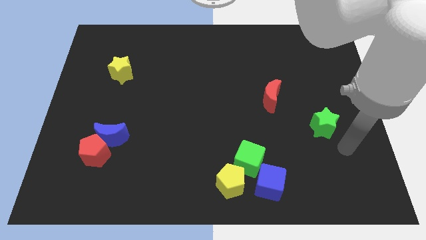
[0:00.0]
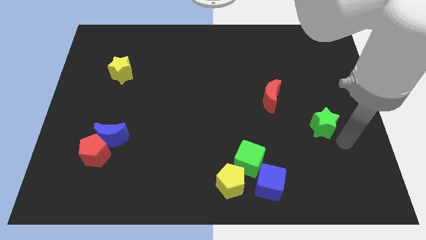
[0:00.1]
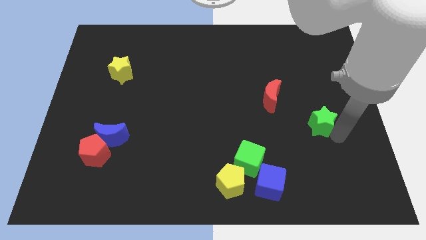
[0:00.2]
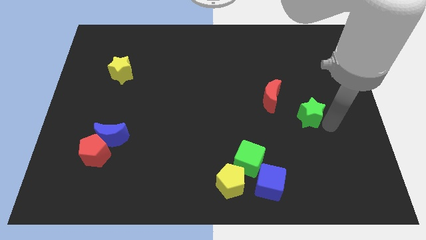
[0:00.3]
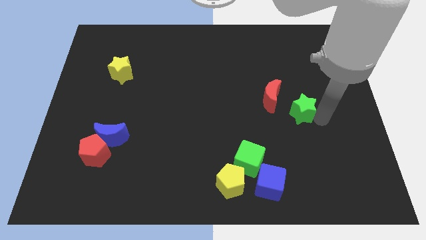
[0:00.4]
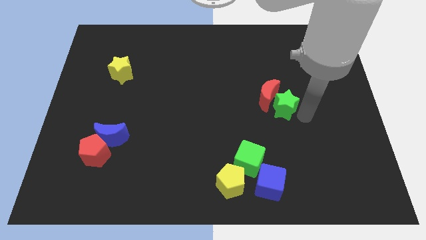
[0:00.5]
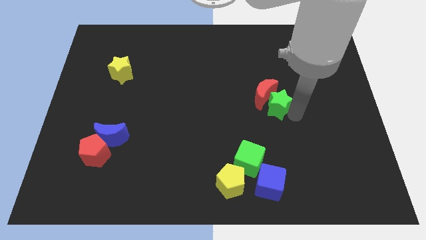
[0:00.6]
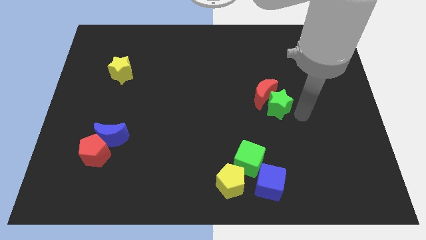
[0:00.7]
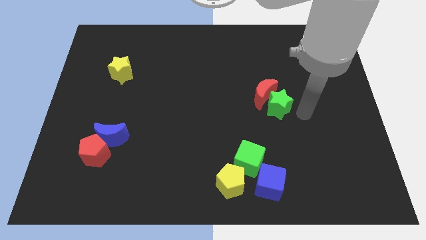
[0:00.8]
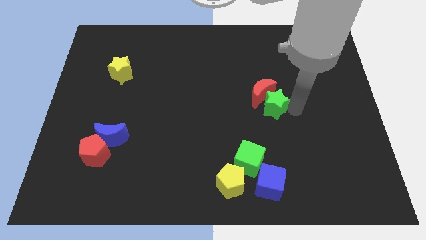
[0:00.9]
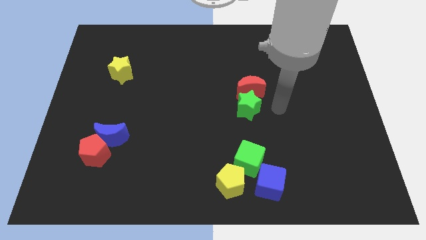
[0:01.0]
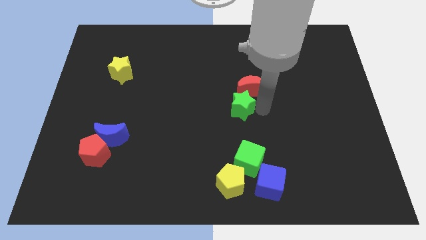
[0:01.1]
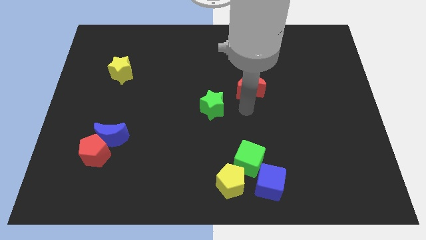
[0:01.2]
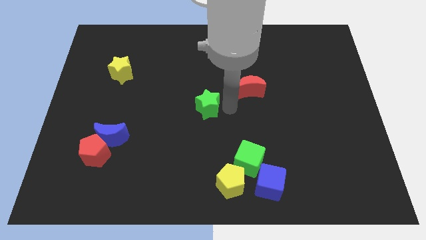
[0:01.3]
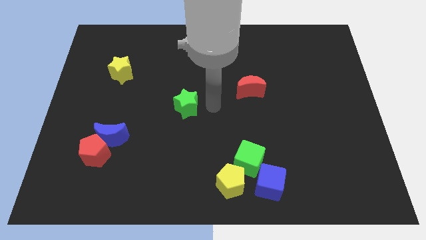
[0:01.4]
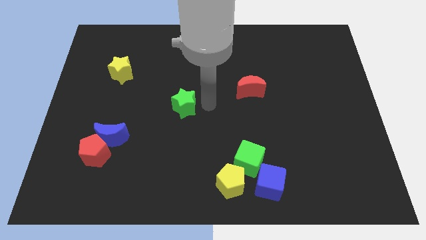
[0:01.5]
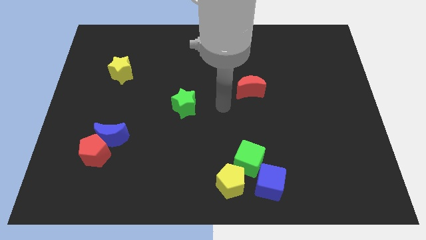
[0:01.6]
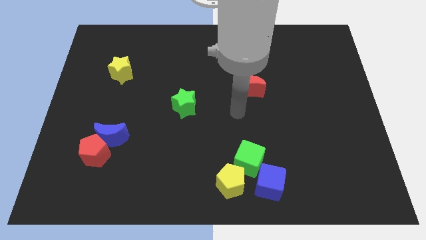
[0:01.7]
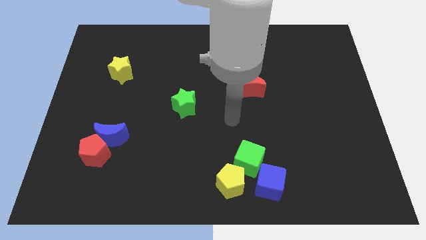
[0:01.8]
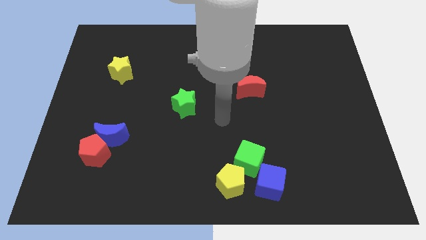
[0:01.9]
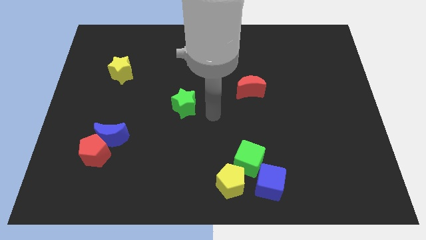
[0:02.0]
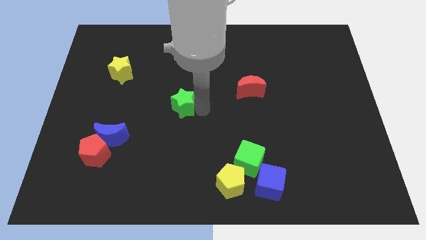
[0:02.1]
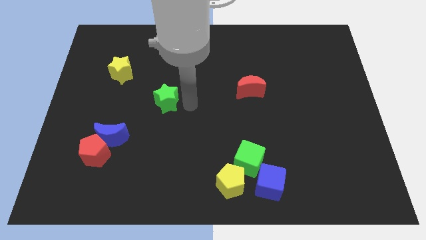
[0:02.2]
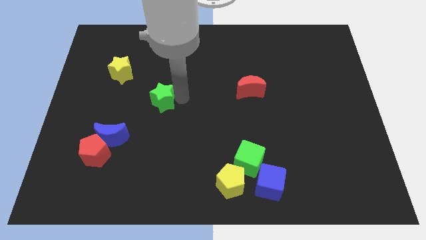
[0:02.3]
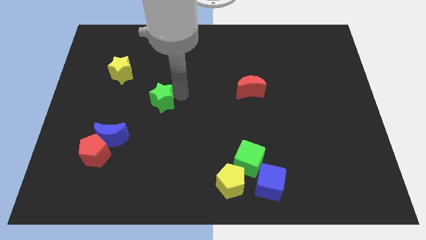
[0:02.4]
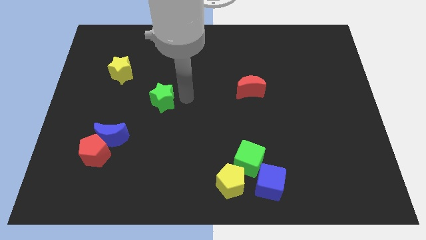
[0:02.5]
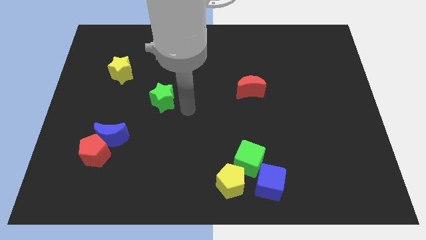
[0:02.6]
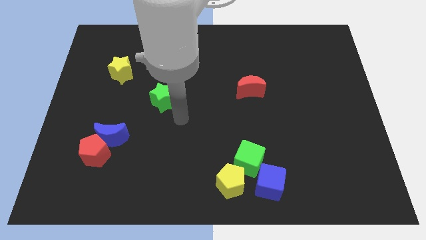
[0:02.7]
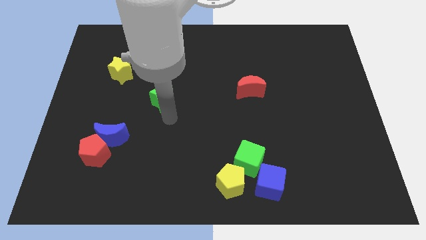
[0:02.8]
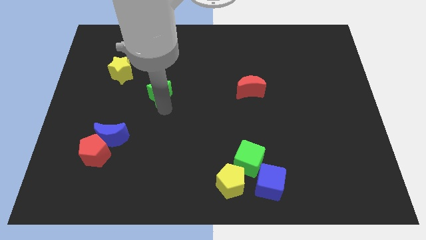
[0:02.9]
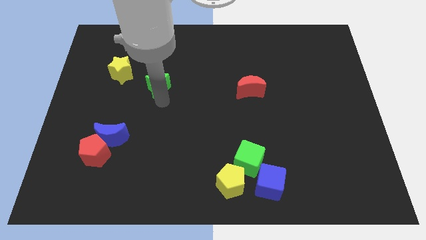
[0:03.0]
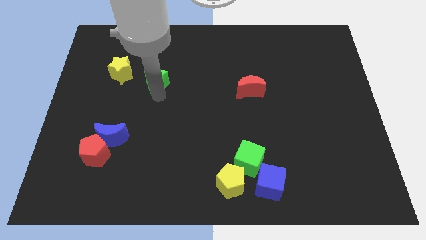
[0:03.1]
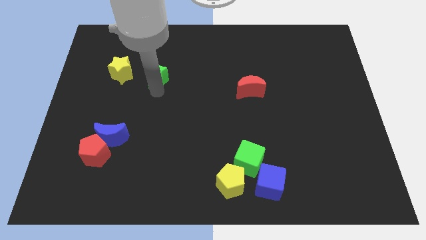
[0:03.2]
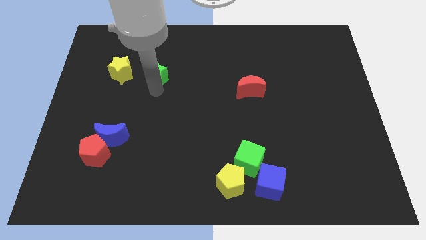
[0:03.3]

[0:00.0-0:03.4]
place the green star in between the red moon and yellow star

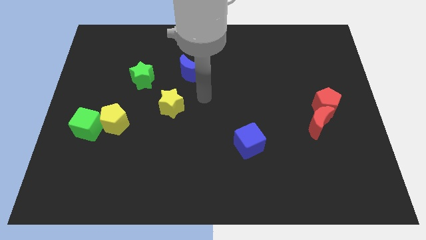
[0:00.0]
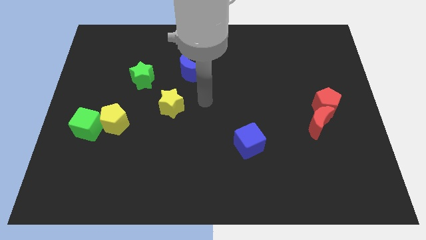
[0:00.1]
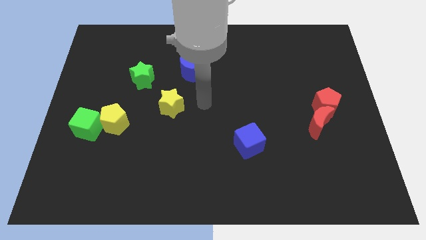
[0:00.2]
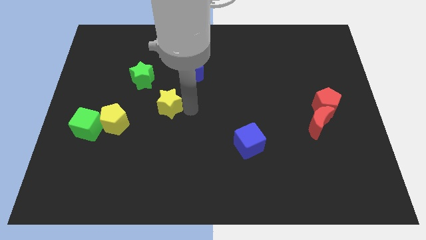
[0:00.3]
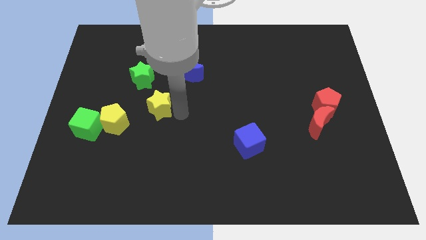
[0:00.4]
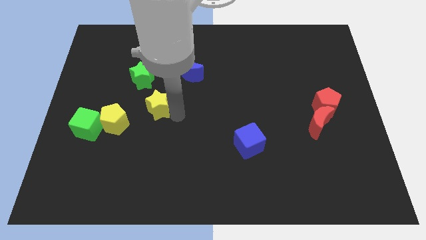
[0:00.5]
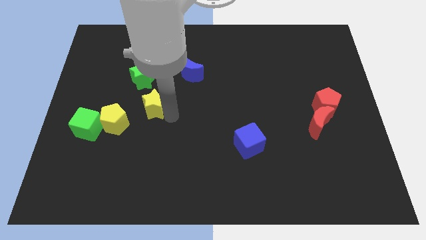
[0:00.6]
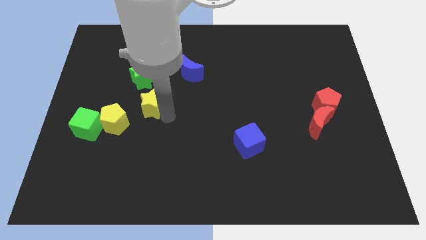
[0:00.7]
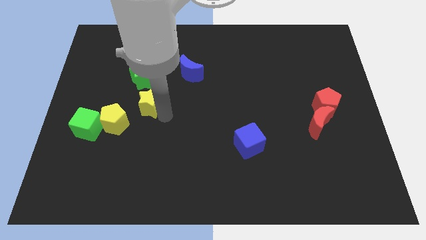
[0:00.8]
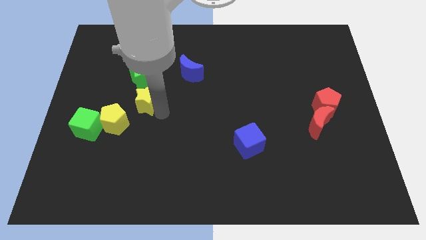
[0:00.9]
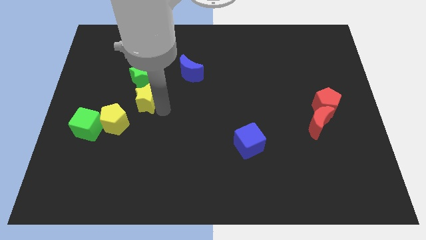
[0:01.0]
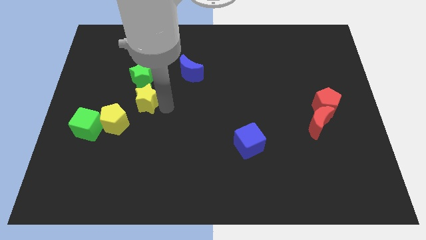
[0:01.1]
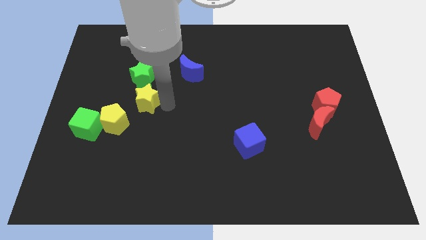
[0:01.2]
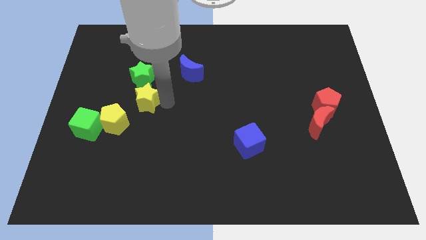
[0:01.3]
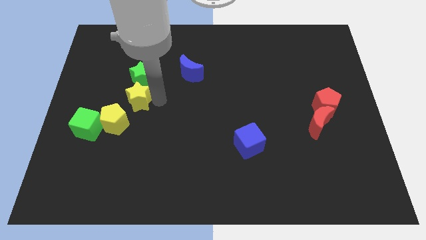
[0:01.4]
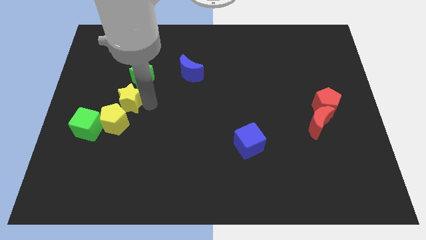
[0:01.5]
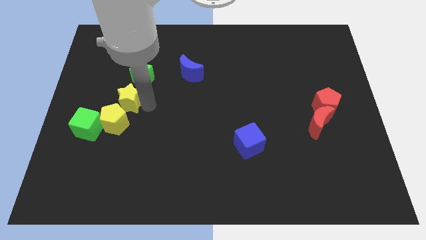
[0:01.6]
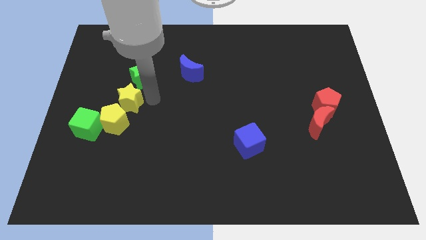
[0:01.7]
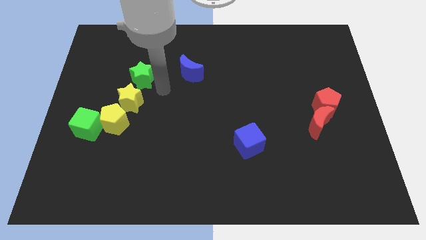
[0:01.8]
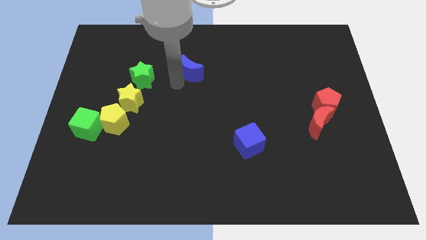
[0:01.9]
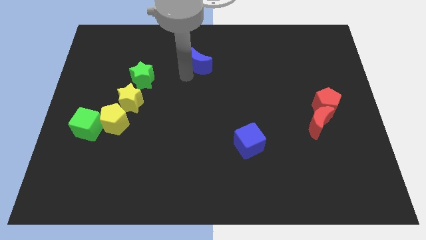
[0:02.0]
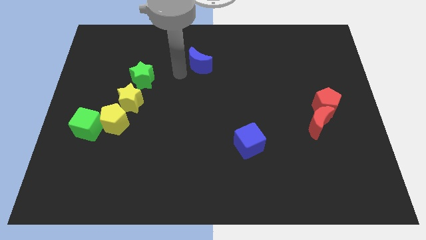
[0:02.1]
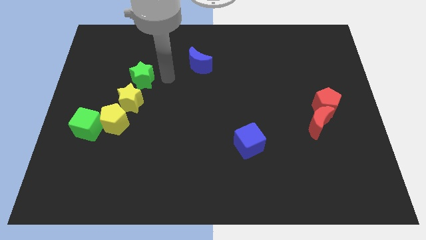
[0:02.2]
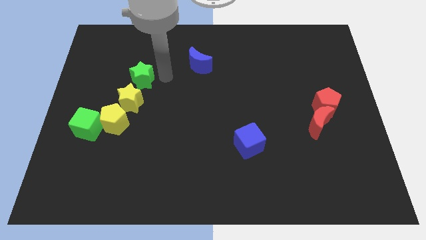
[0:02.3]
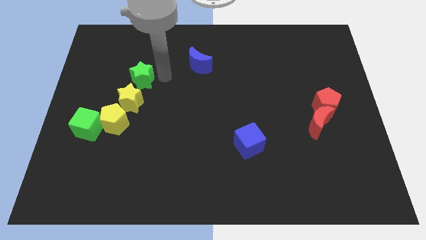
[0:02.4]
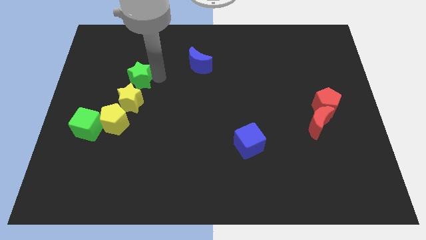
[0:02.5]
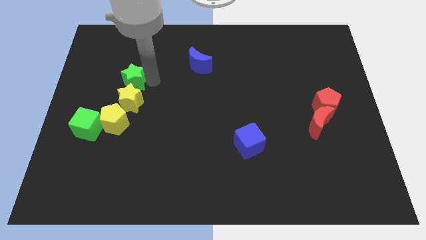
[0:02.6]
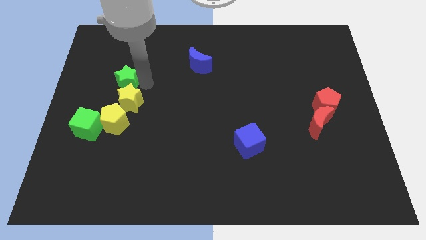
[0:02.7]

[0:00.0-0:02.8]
place the yellow star in between the yellow pentagon and the green star

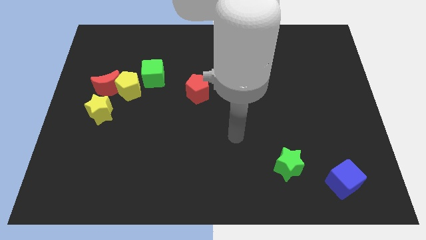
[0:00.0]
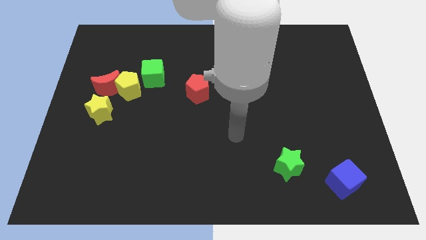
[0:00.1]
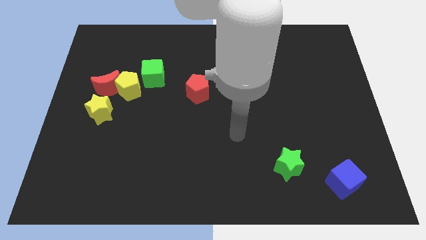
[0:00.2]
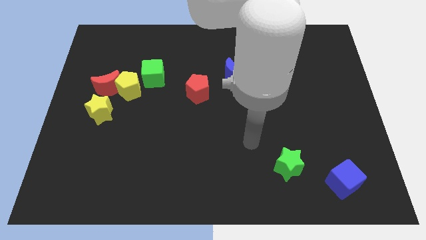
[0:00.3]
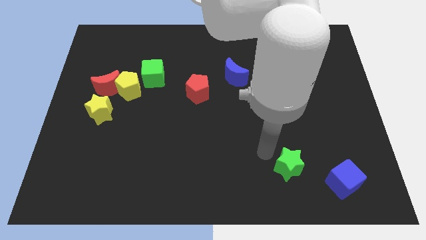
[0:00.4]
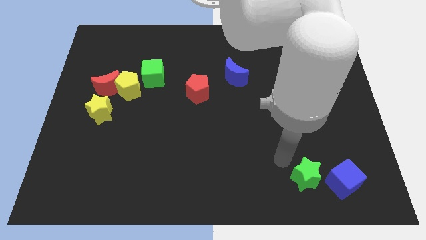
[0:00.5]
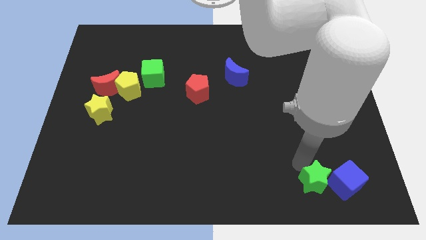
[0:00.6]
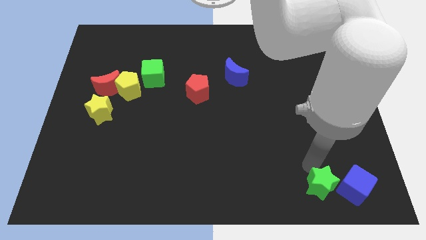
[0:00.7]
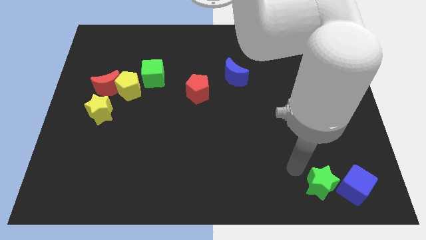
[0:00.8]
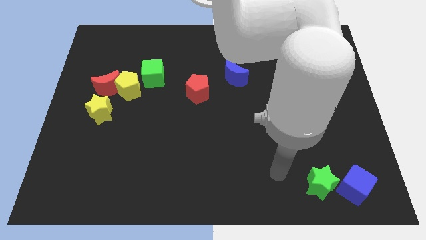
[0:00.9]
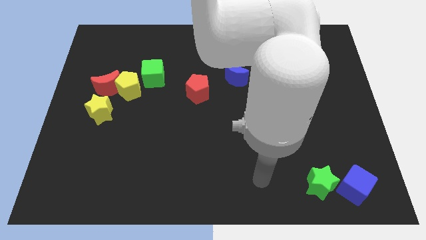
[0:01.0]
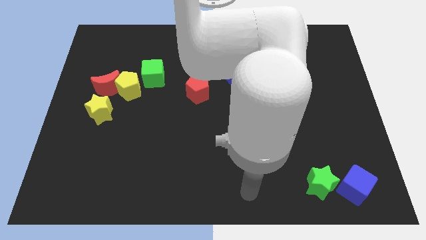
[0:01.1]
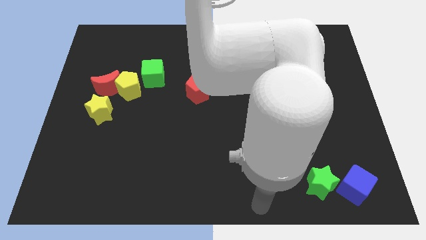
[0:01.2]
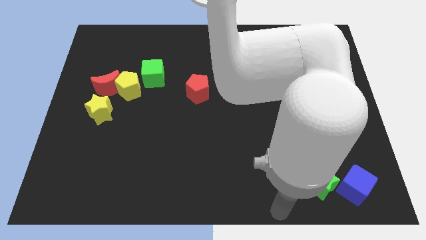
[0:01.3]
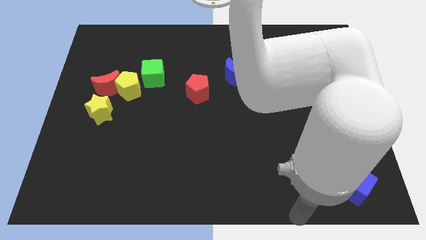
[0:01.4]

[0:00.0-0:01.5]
move green star into the blue cube

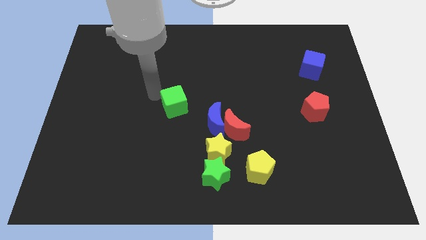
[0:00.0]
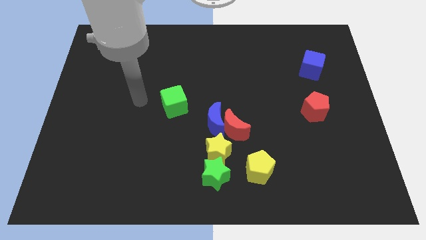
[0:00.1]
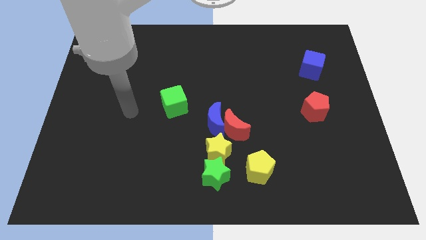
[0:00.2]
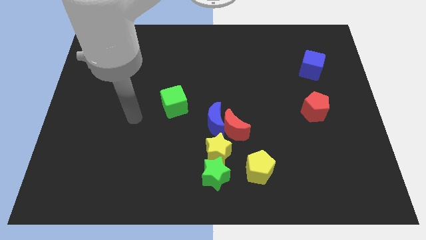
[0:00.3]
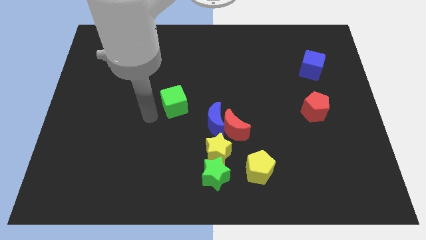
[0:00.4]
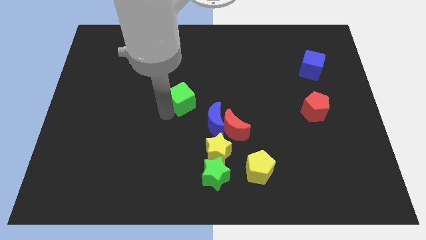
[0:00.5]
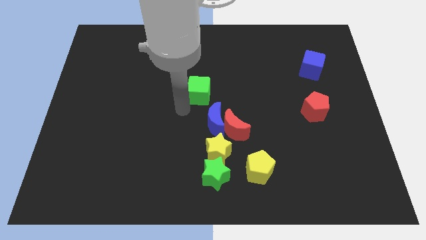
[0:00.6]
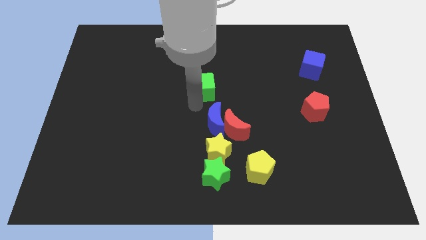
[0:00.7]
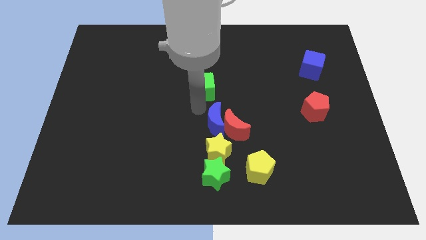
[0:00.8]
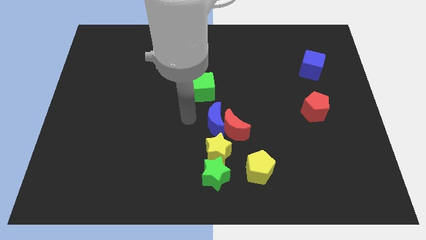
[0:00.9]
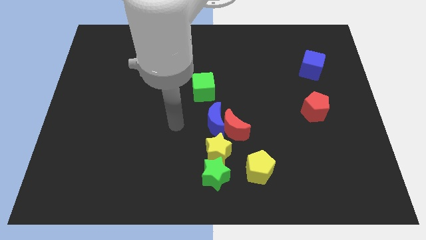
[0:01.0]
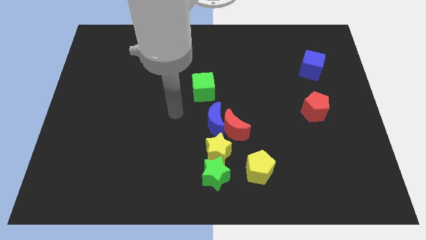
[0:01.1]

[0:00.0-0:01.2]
move the green cube to the center of the board

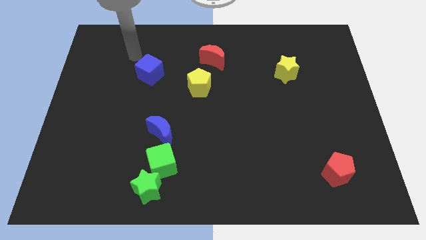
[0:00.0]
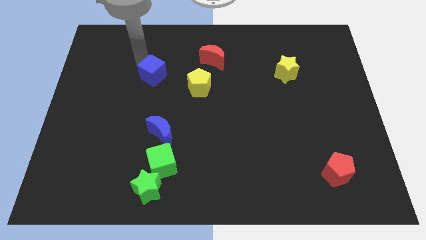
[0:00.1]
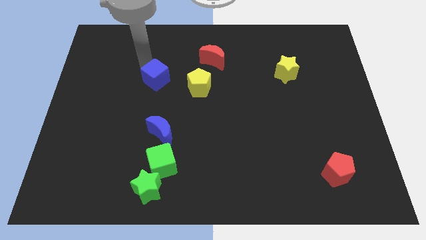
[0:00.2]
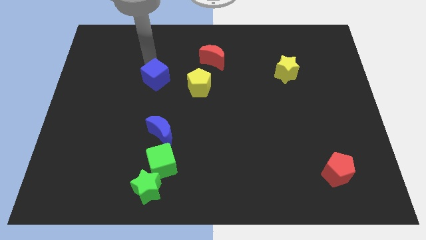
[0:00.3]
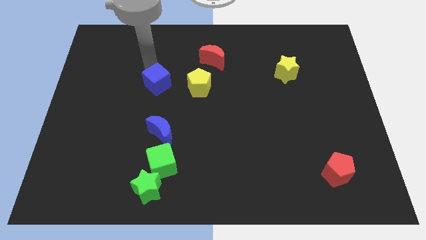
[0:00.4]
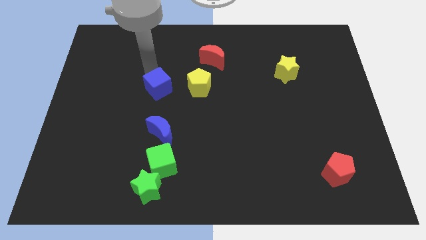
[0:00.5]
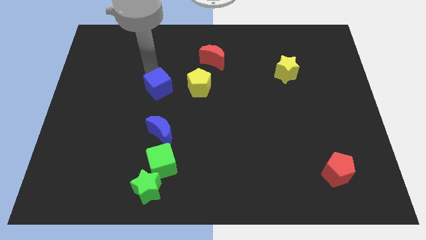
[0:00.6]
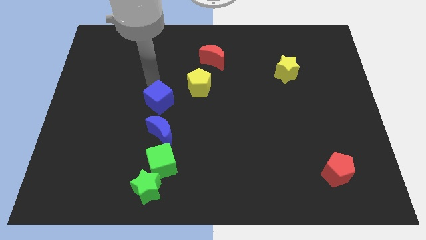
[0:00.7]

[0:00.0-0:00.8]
move the blue cube to the left of the yellow pentagon
